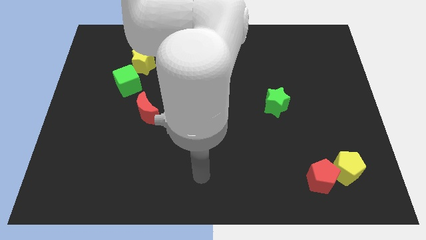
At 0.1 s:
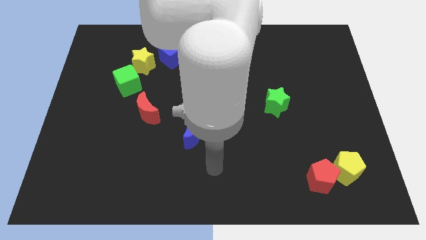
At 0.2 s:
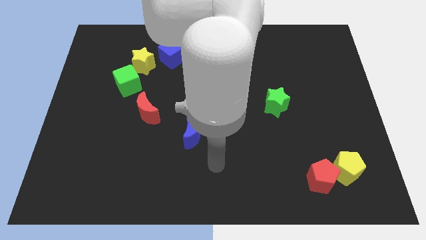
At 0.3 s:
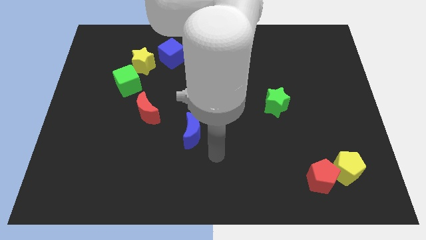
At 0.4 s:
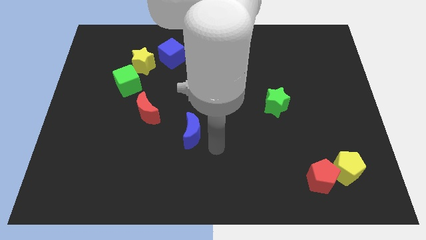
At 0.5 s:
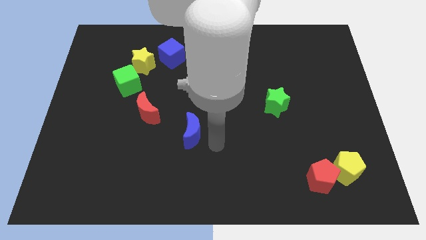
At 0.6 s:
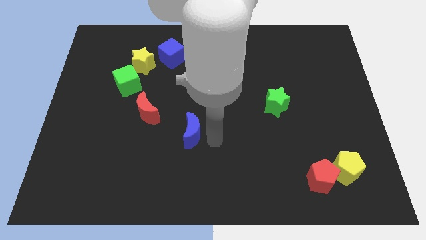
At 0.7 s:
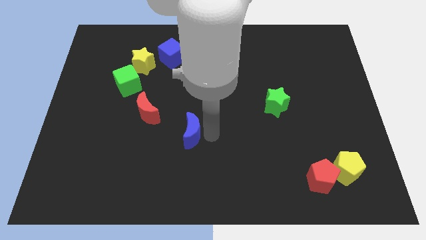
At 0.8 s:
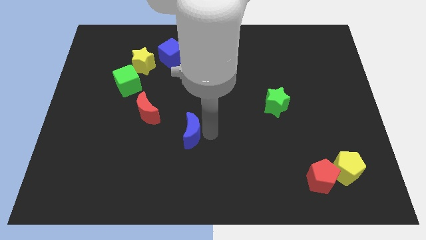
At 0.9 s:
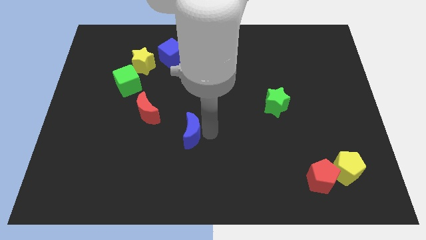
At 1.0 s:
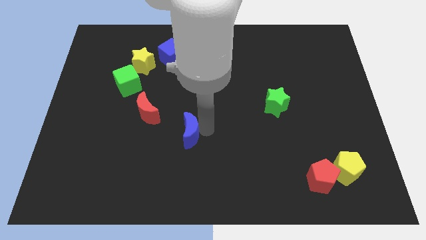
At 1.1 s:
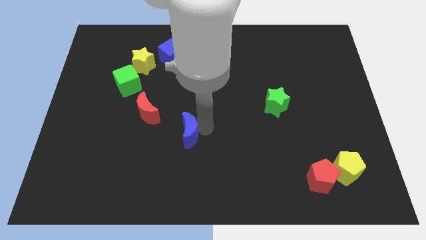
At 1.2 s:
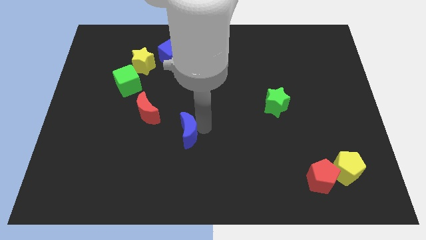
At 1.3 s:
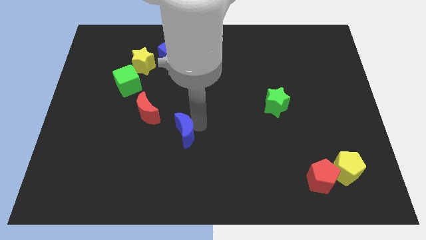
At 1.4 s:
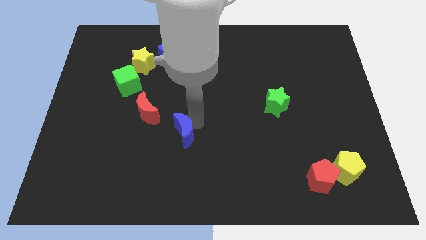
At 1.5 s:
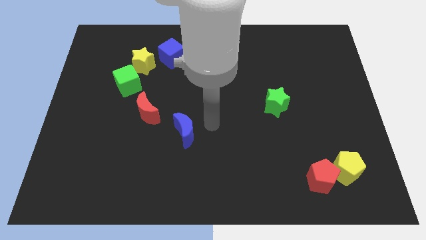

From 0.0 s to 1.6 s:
push the blue crescent at the bottom side of the blue cube

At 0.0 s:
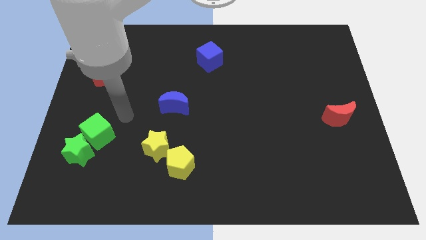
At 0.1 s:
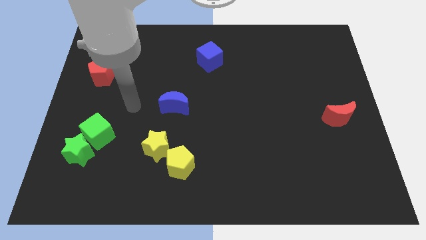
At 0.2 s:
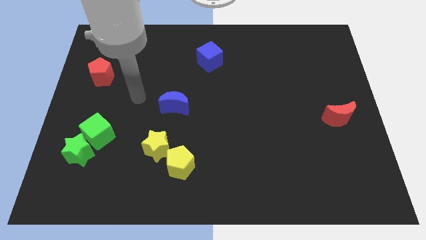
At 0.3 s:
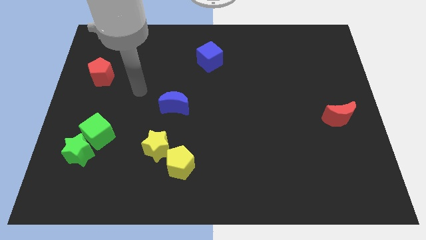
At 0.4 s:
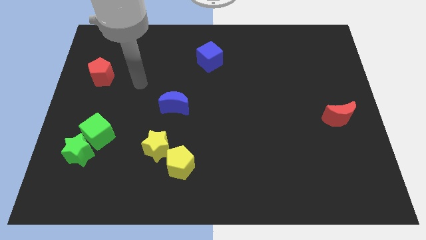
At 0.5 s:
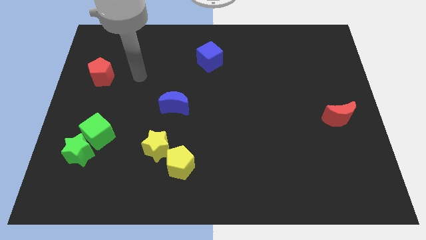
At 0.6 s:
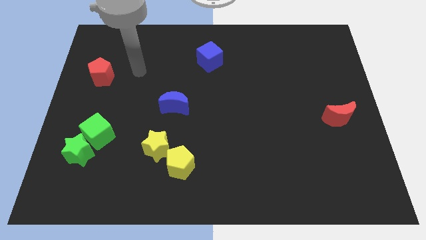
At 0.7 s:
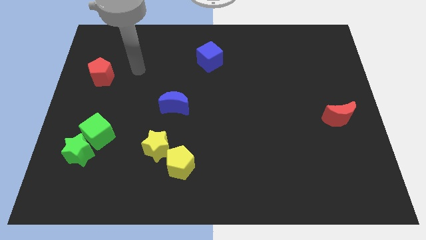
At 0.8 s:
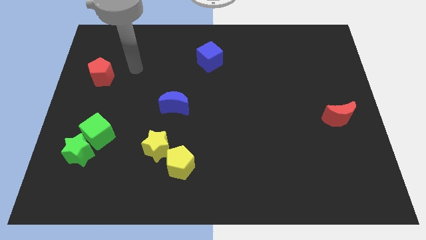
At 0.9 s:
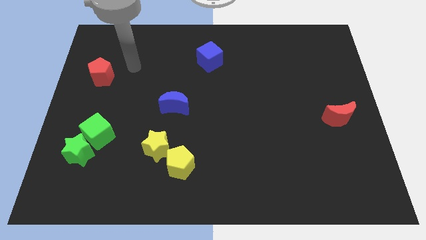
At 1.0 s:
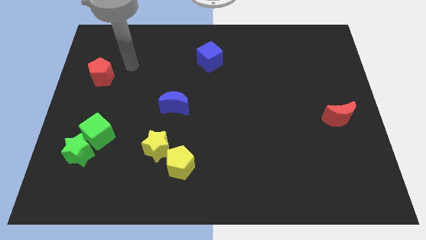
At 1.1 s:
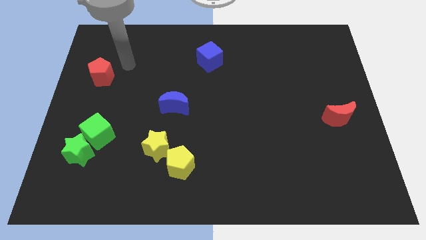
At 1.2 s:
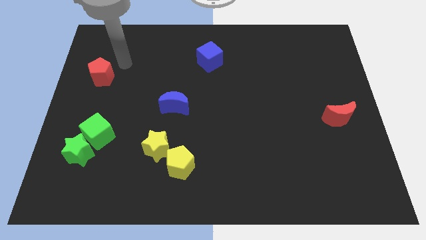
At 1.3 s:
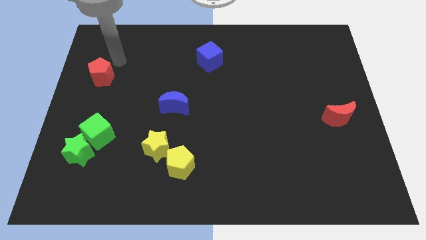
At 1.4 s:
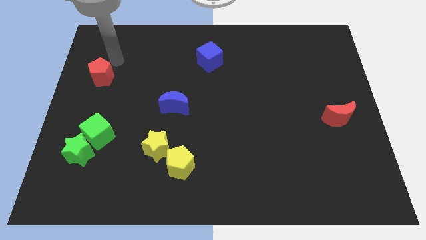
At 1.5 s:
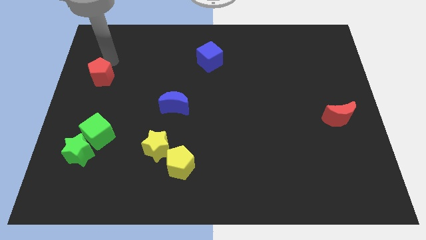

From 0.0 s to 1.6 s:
move your arm to the top of the red pentagon

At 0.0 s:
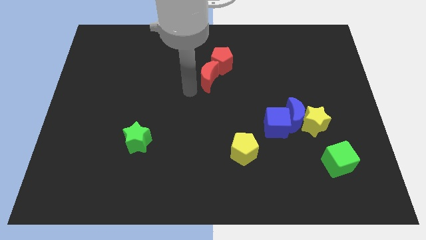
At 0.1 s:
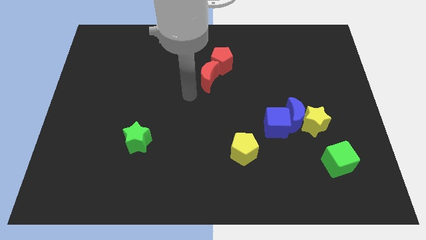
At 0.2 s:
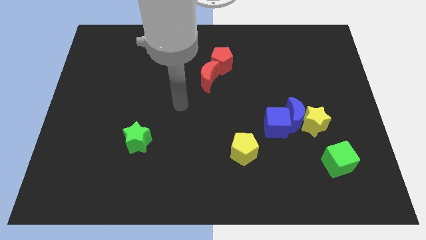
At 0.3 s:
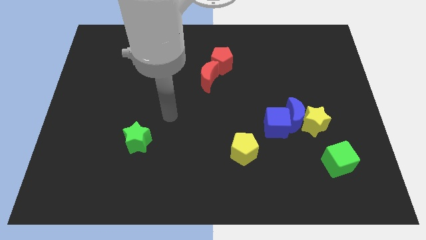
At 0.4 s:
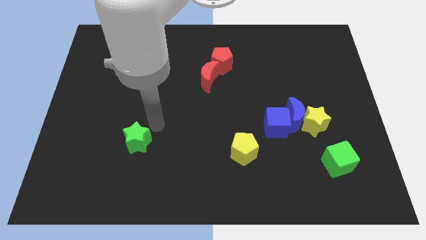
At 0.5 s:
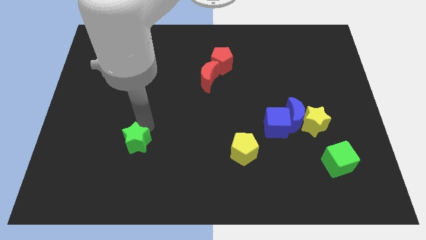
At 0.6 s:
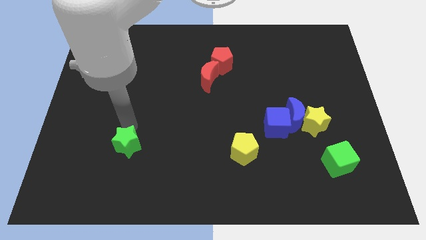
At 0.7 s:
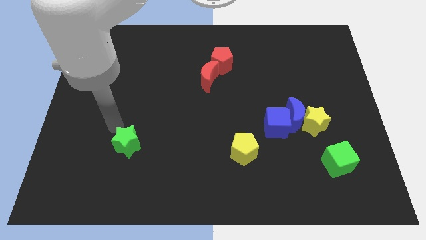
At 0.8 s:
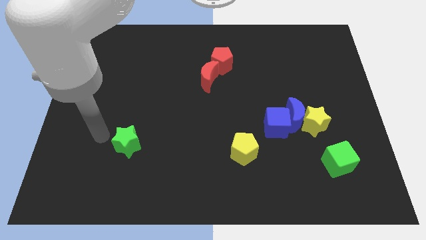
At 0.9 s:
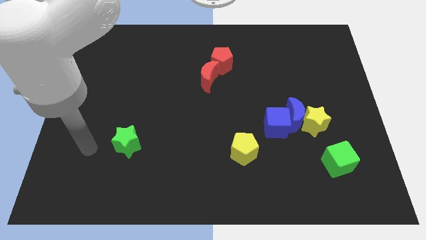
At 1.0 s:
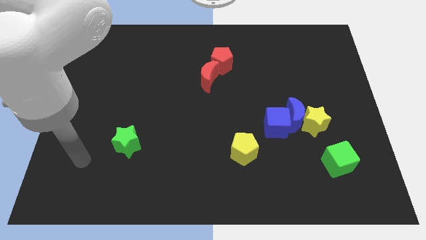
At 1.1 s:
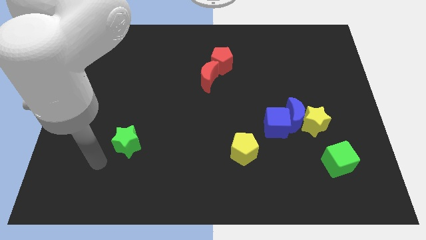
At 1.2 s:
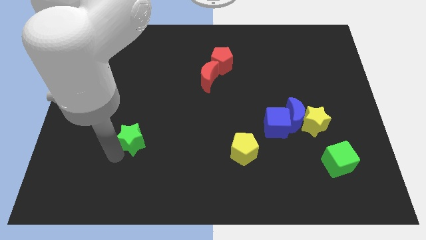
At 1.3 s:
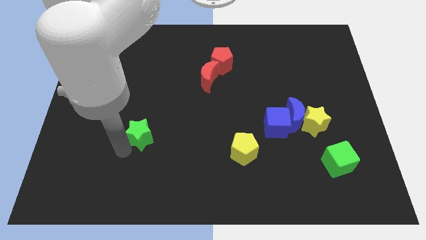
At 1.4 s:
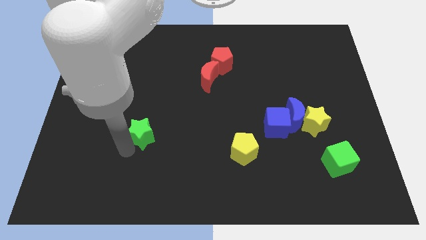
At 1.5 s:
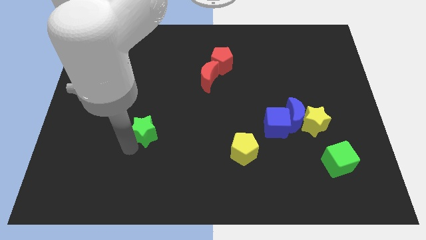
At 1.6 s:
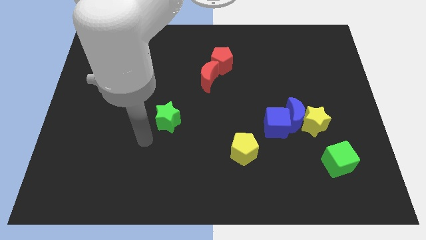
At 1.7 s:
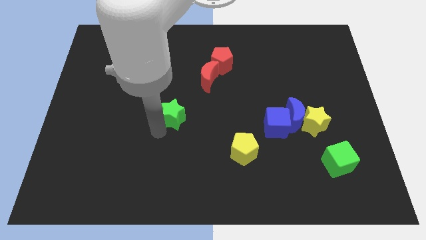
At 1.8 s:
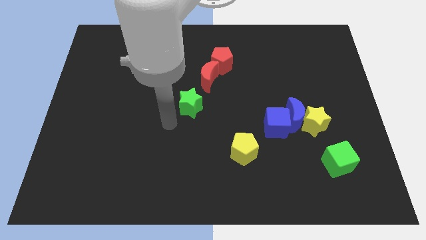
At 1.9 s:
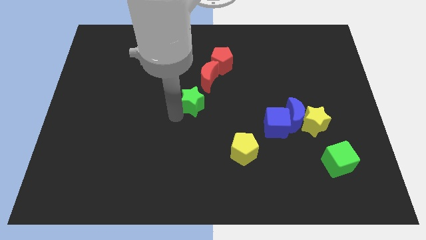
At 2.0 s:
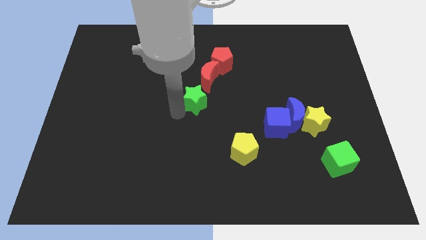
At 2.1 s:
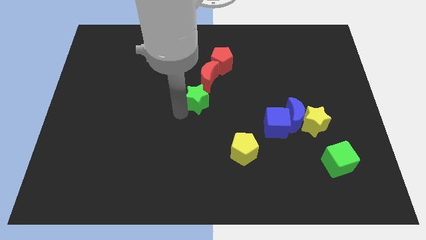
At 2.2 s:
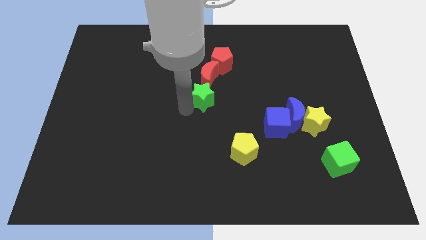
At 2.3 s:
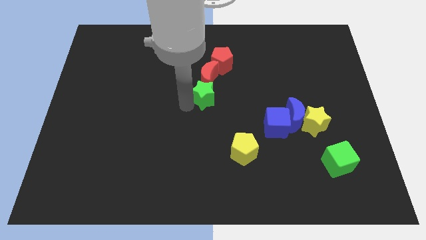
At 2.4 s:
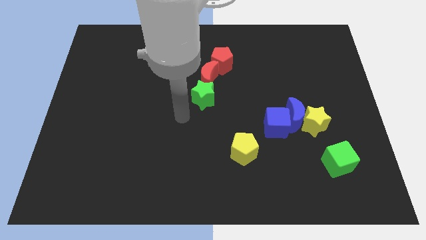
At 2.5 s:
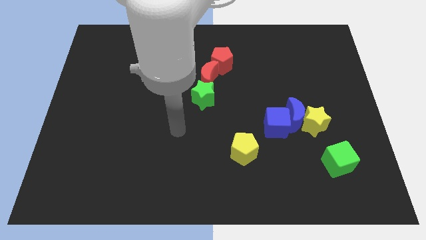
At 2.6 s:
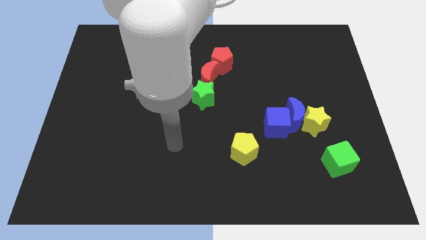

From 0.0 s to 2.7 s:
move the green star to the bottom side of the the red moon

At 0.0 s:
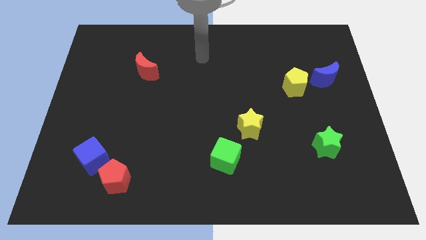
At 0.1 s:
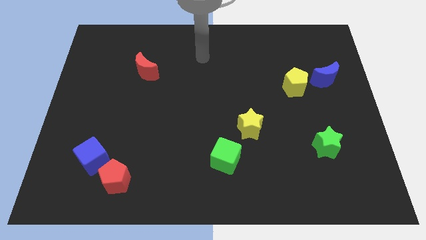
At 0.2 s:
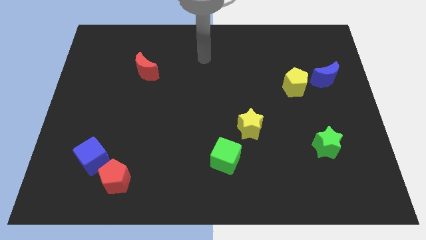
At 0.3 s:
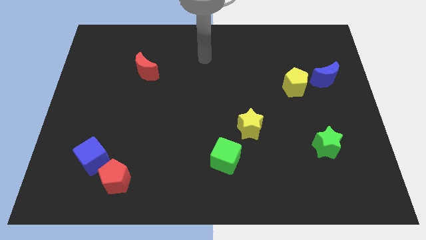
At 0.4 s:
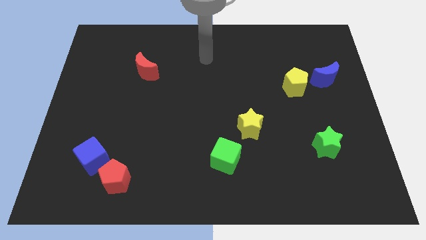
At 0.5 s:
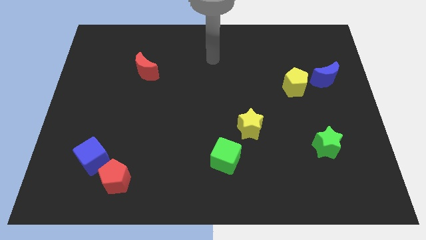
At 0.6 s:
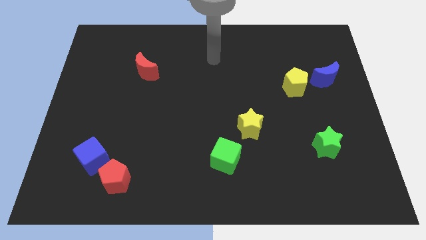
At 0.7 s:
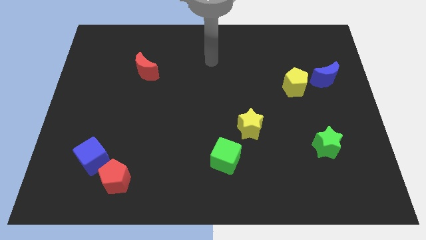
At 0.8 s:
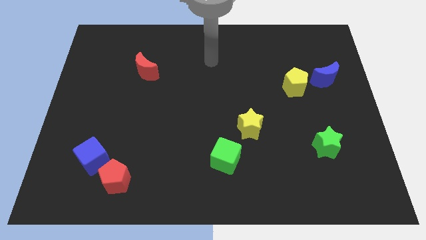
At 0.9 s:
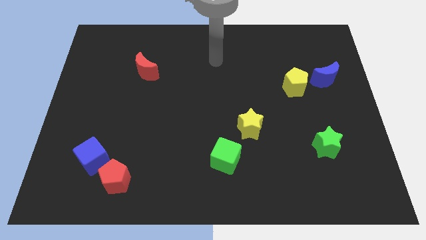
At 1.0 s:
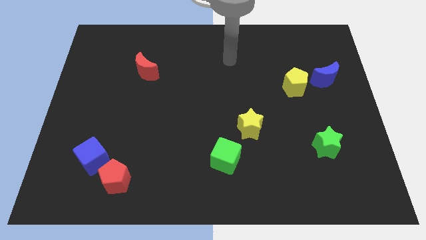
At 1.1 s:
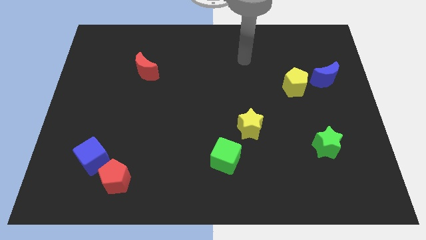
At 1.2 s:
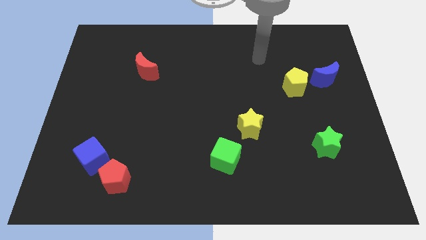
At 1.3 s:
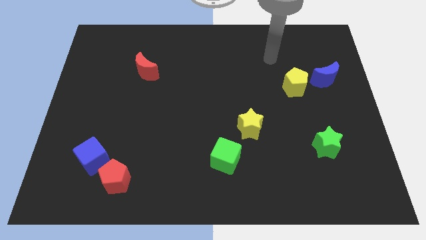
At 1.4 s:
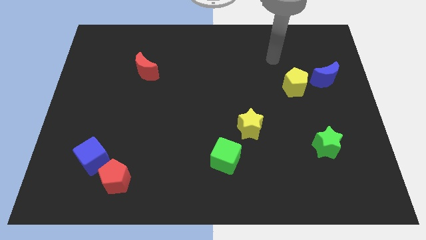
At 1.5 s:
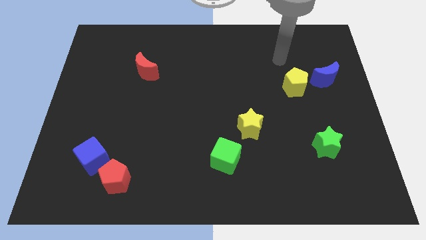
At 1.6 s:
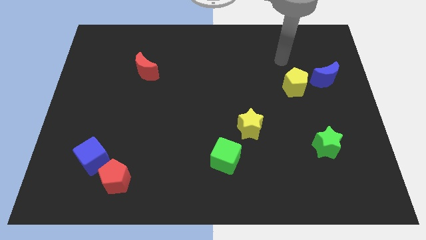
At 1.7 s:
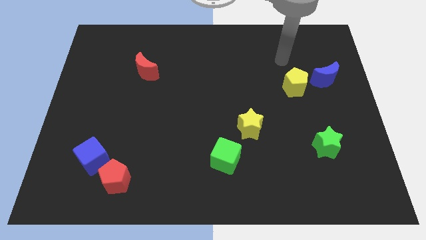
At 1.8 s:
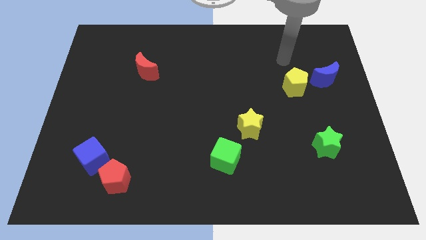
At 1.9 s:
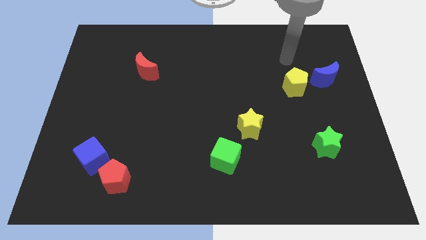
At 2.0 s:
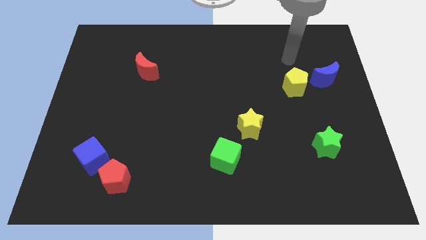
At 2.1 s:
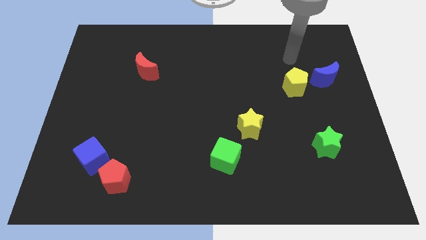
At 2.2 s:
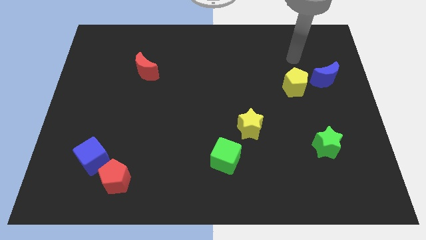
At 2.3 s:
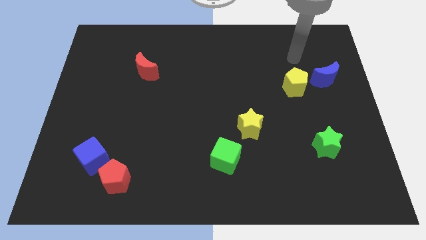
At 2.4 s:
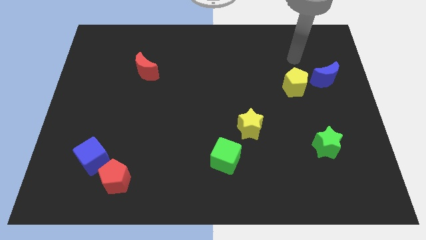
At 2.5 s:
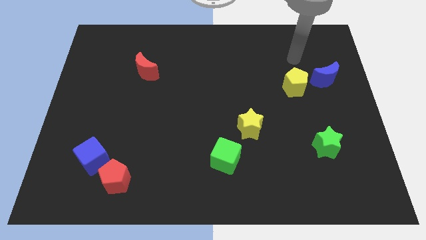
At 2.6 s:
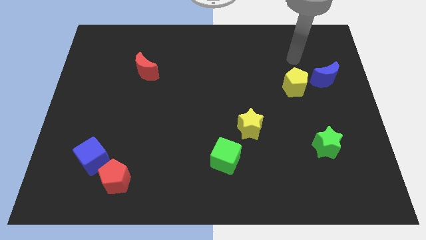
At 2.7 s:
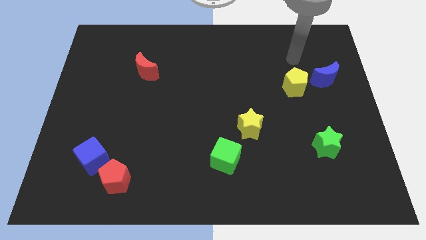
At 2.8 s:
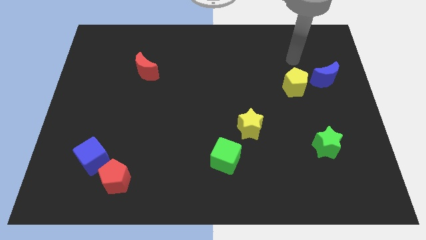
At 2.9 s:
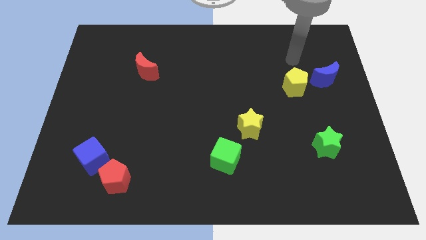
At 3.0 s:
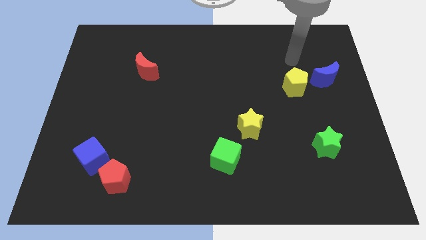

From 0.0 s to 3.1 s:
go and point your hand above the yellow pentagon
